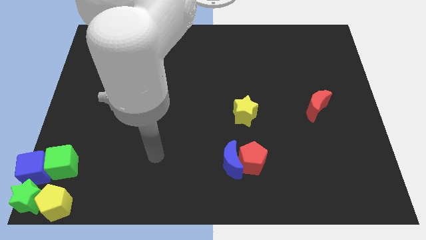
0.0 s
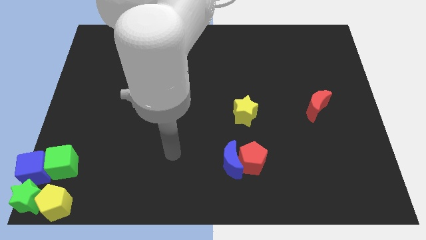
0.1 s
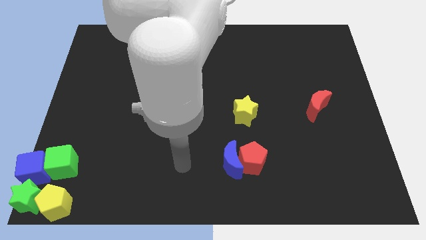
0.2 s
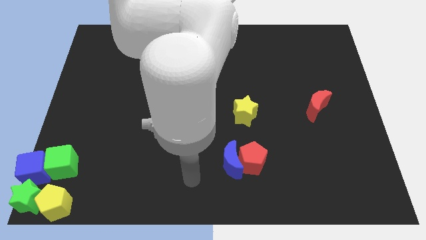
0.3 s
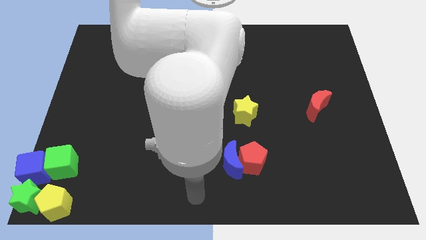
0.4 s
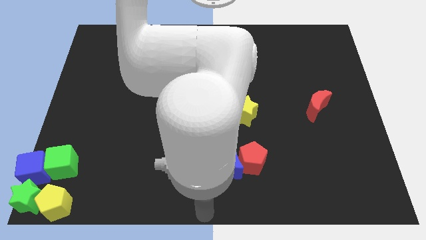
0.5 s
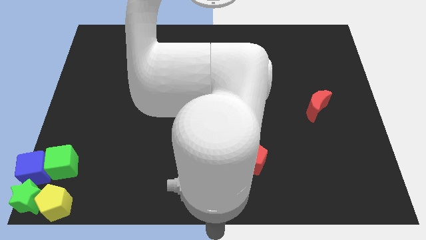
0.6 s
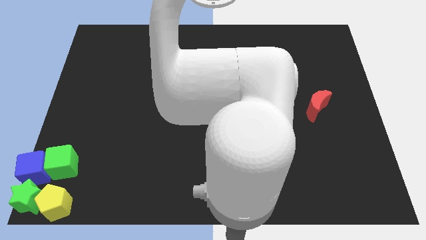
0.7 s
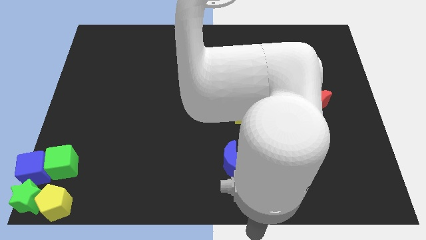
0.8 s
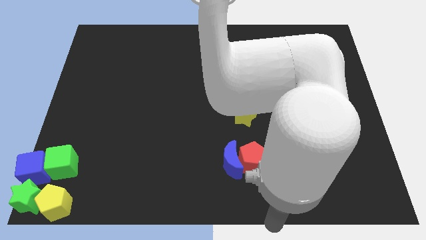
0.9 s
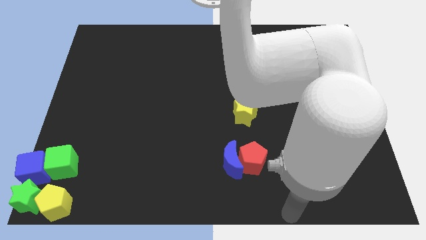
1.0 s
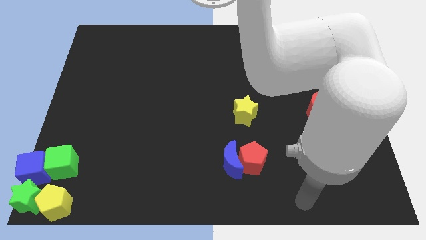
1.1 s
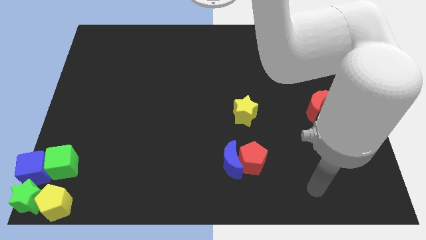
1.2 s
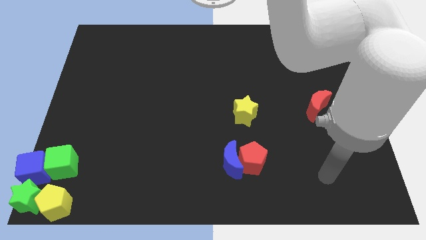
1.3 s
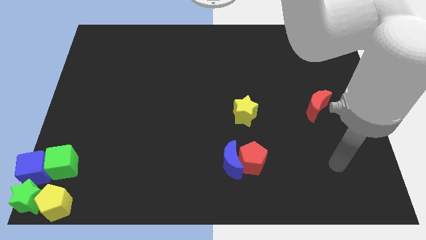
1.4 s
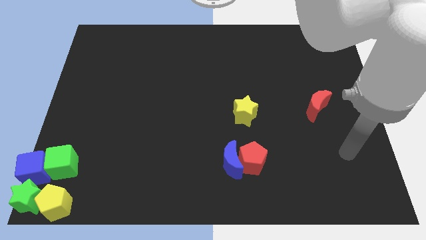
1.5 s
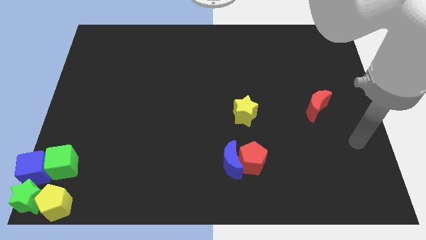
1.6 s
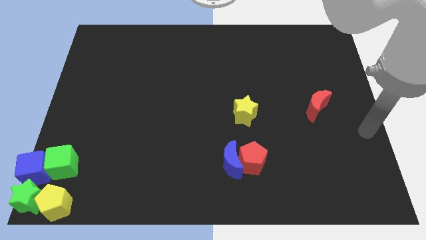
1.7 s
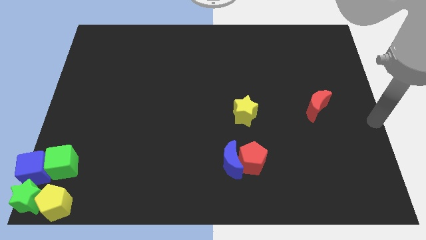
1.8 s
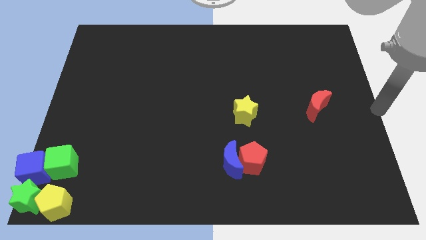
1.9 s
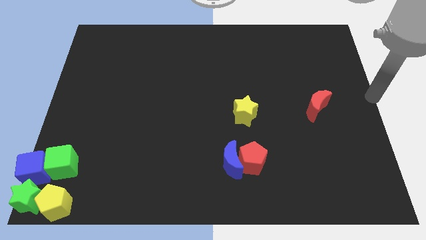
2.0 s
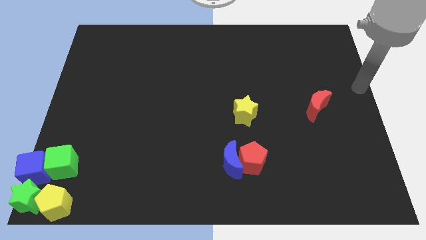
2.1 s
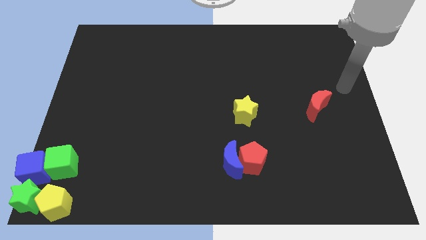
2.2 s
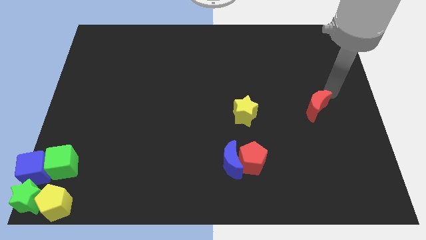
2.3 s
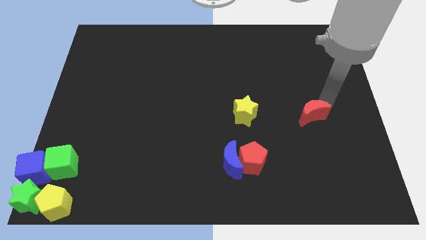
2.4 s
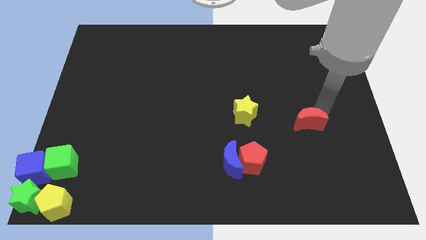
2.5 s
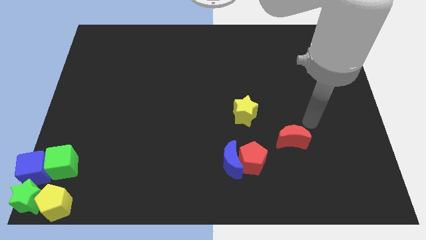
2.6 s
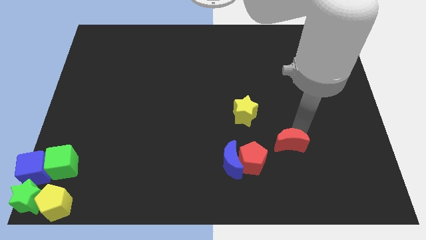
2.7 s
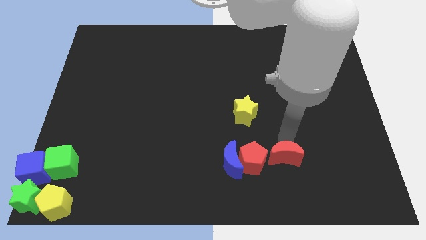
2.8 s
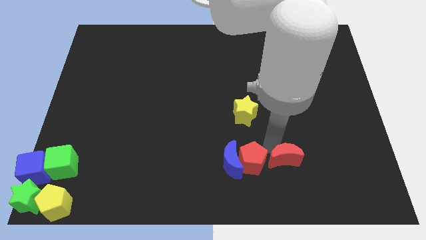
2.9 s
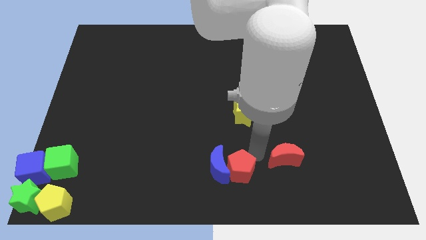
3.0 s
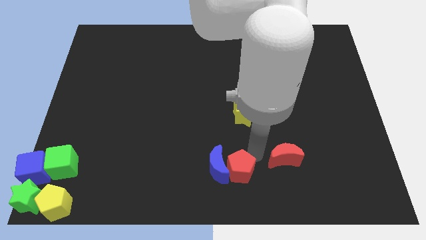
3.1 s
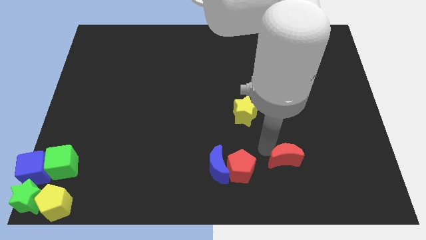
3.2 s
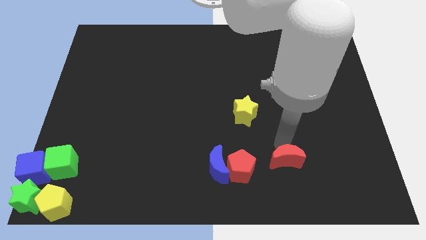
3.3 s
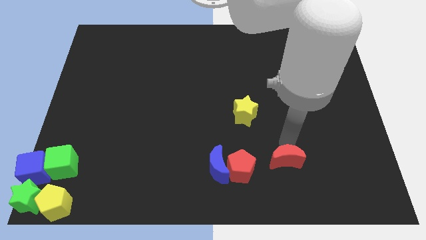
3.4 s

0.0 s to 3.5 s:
slide the red moon right to the red pentagon

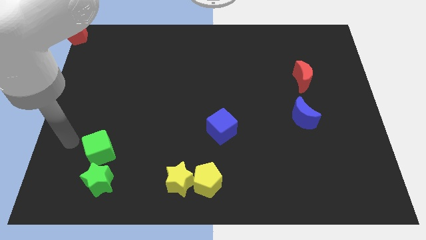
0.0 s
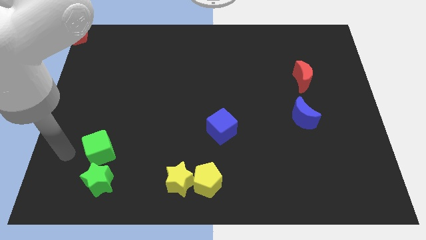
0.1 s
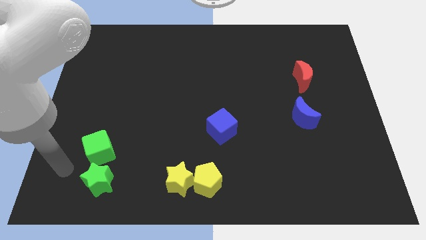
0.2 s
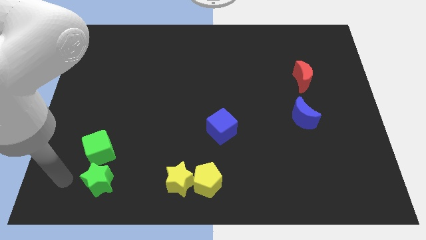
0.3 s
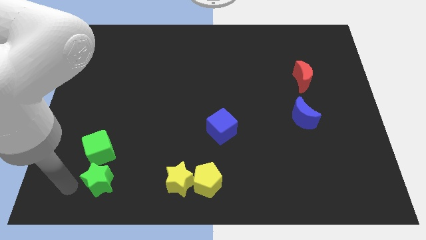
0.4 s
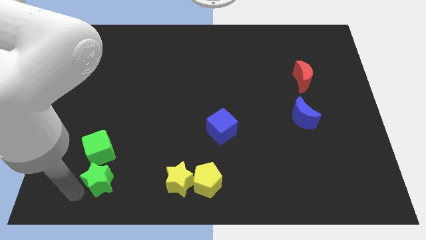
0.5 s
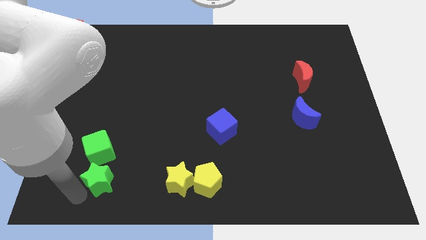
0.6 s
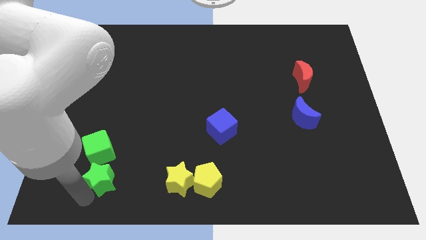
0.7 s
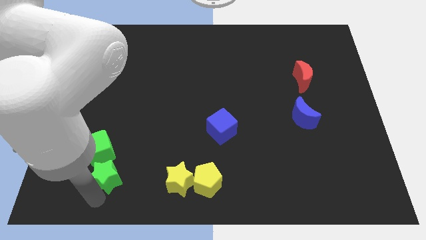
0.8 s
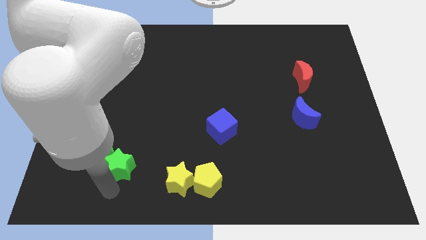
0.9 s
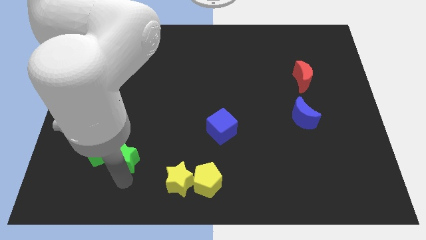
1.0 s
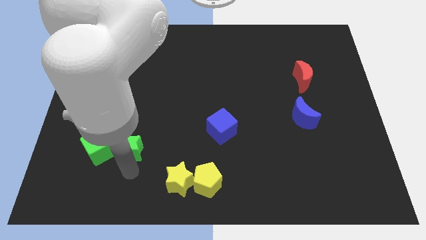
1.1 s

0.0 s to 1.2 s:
move the green star right to the green cube

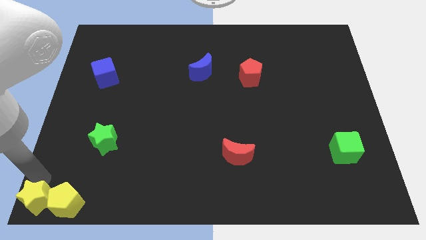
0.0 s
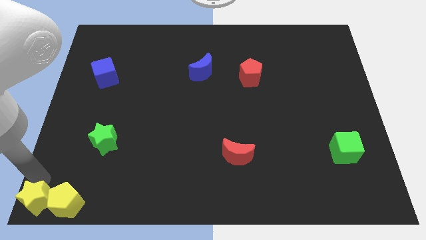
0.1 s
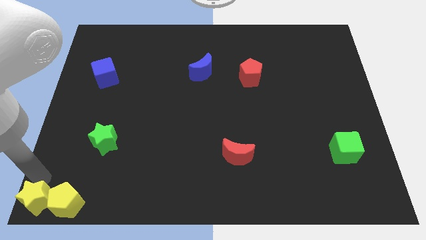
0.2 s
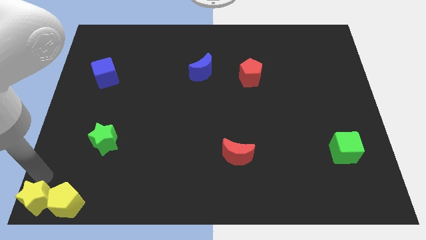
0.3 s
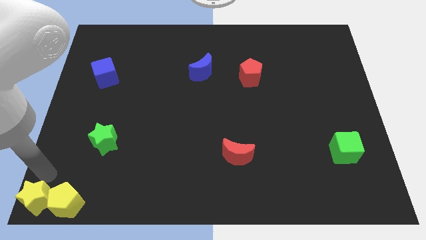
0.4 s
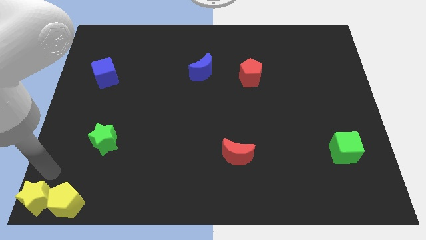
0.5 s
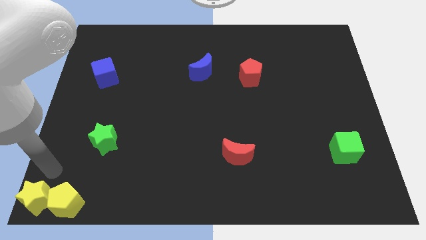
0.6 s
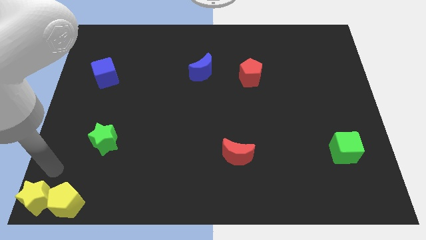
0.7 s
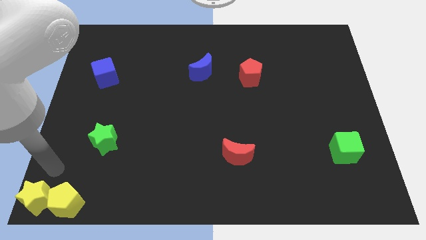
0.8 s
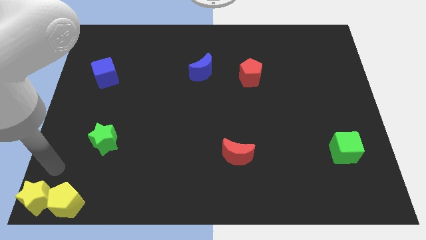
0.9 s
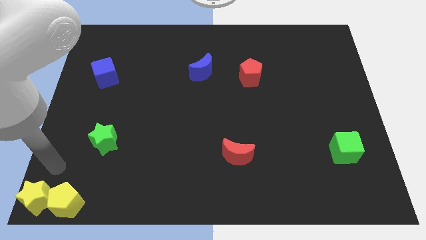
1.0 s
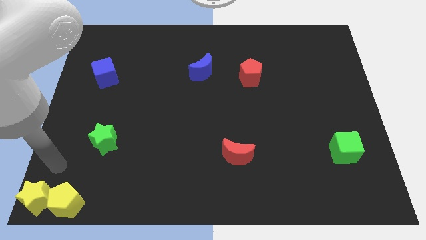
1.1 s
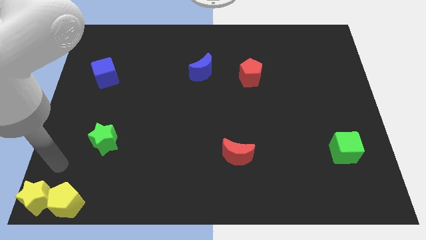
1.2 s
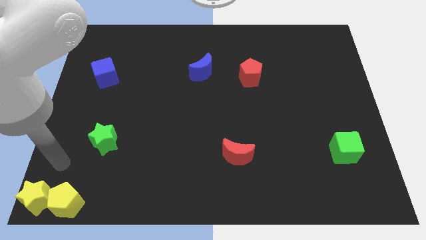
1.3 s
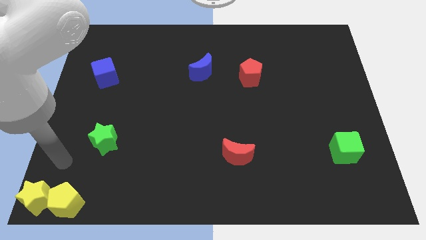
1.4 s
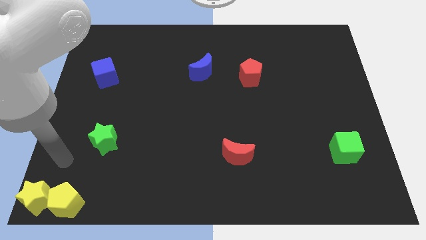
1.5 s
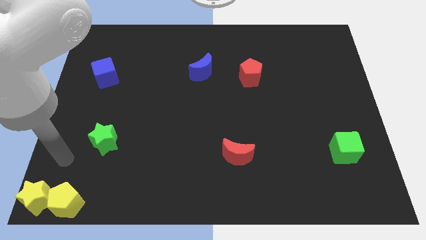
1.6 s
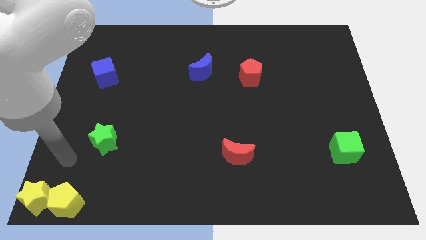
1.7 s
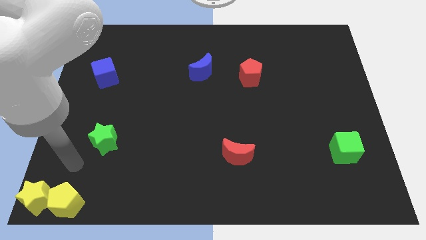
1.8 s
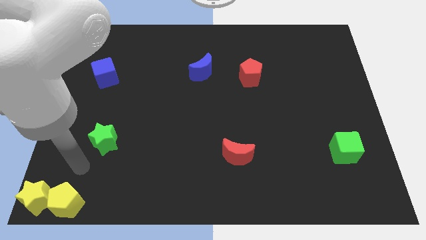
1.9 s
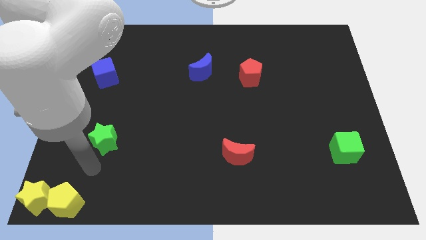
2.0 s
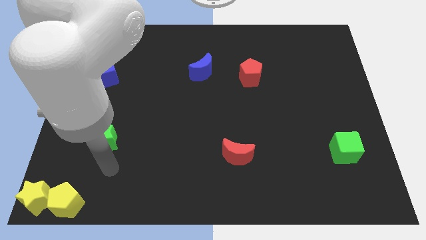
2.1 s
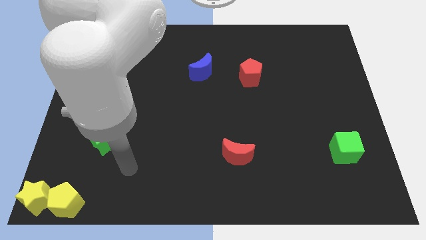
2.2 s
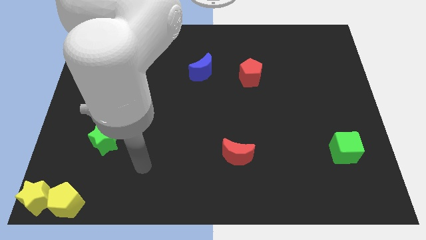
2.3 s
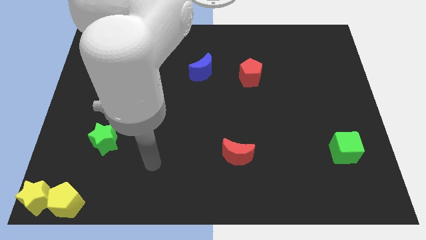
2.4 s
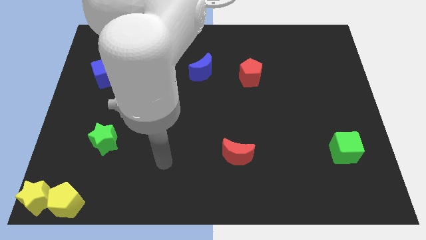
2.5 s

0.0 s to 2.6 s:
move your arm away from the yellow star

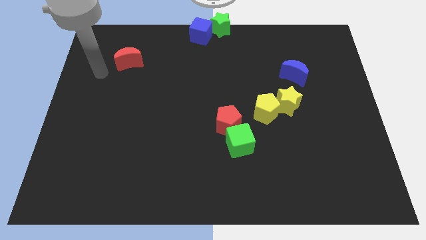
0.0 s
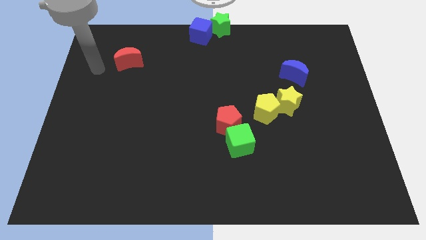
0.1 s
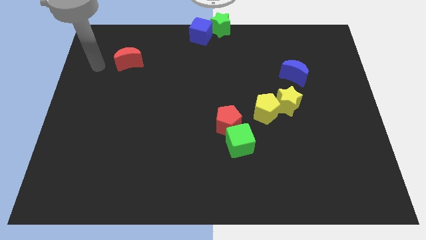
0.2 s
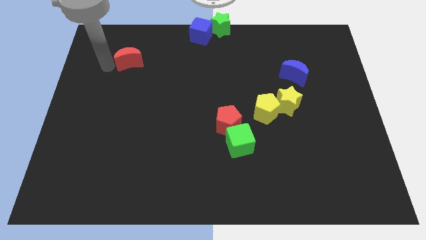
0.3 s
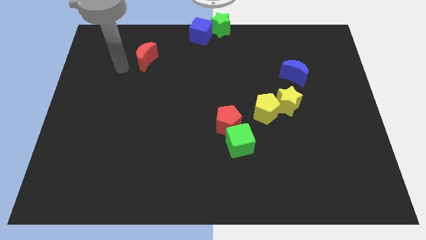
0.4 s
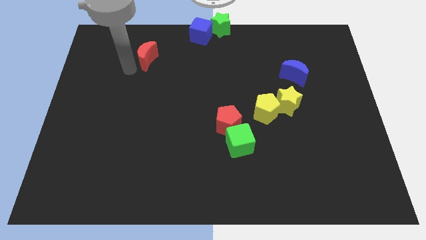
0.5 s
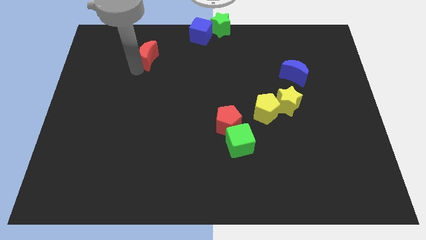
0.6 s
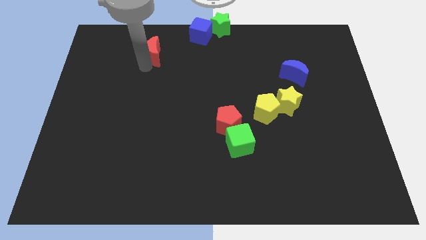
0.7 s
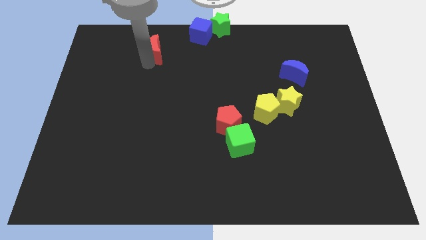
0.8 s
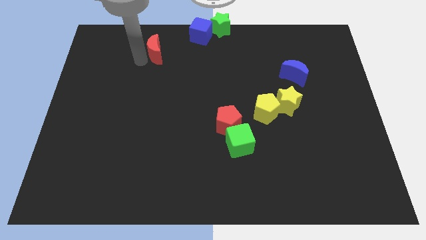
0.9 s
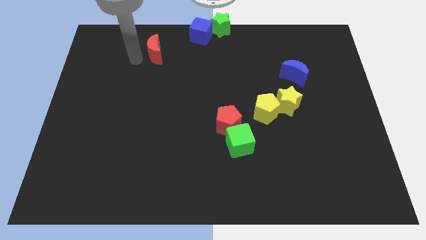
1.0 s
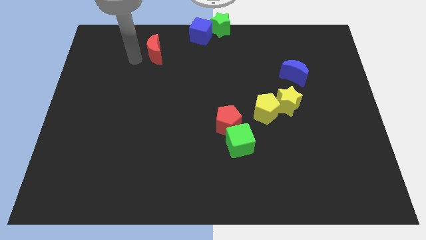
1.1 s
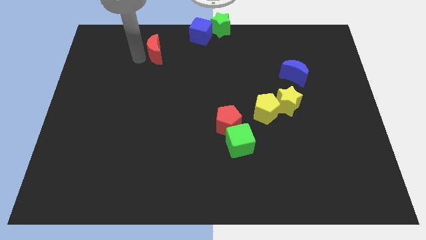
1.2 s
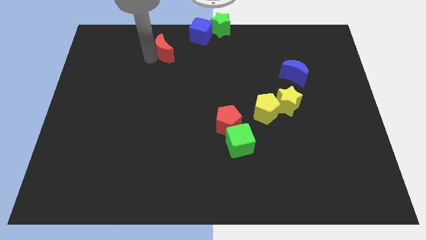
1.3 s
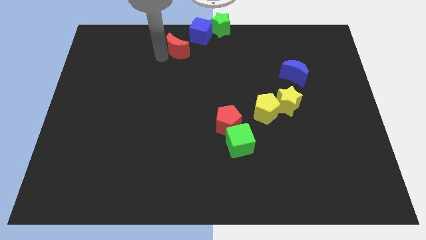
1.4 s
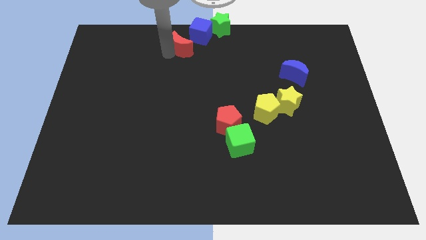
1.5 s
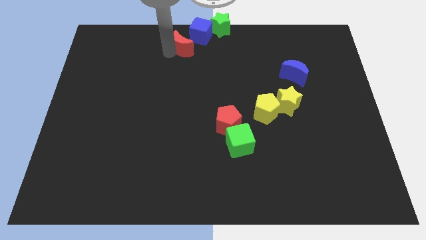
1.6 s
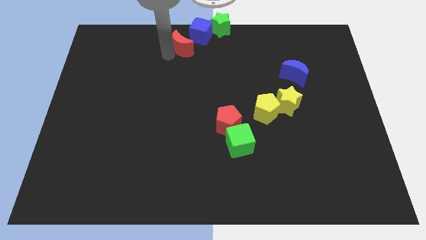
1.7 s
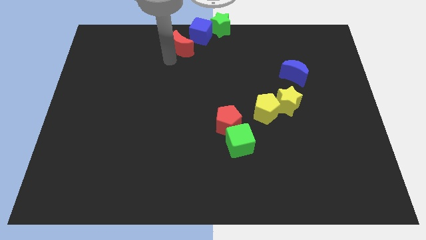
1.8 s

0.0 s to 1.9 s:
drag the red moon towards the blue cube
